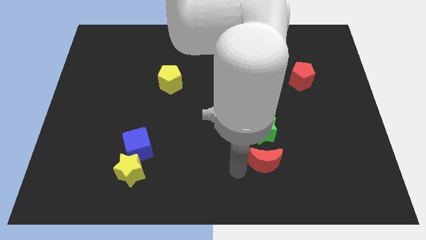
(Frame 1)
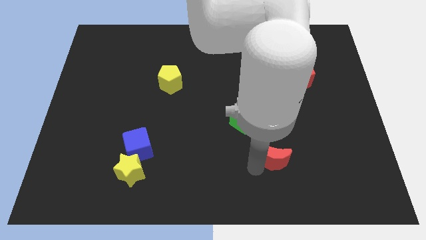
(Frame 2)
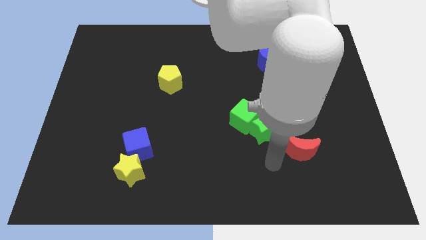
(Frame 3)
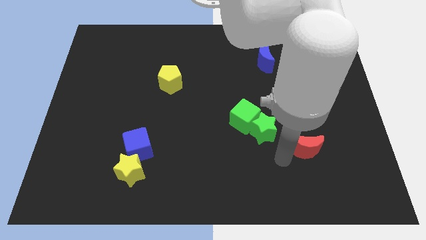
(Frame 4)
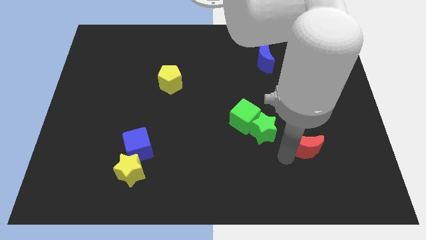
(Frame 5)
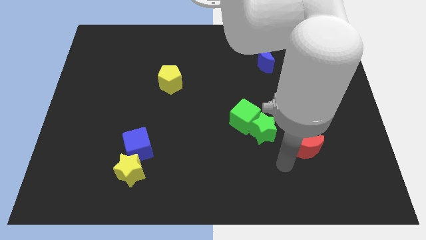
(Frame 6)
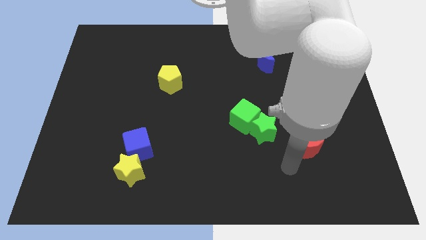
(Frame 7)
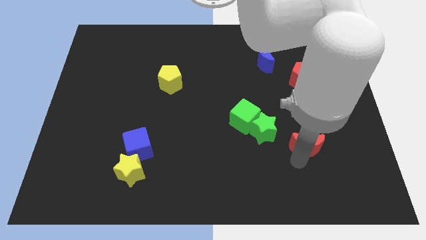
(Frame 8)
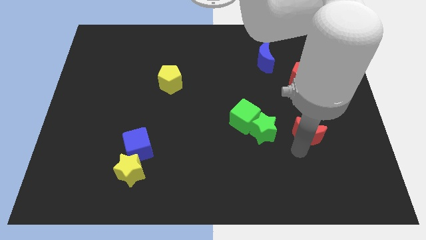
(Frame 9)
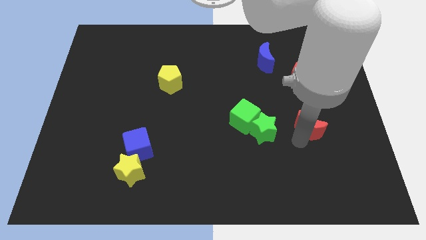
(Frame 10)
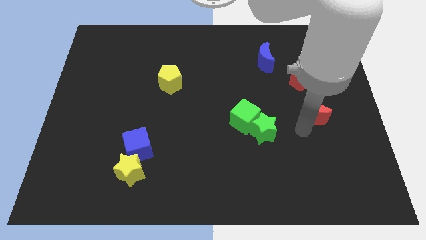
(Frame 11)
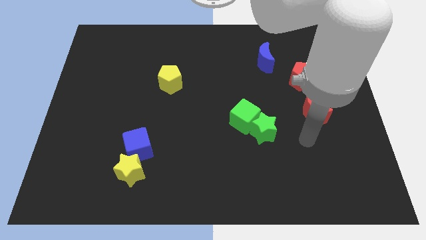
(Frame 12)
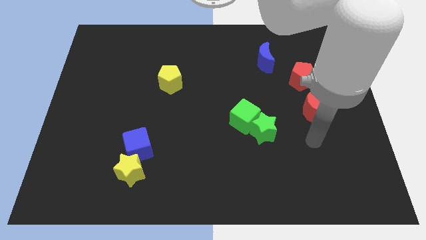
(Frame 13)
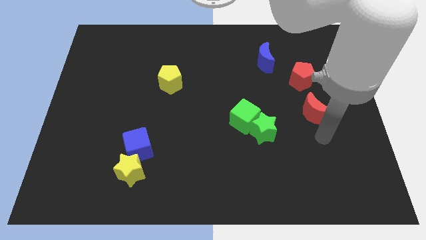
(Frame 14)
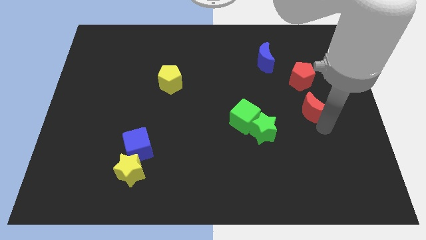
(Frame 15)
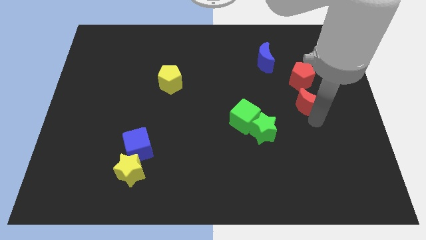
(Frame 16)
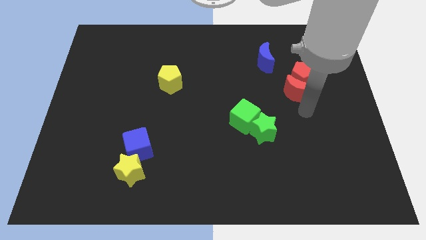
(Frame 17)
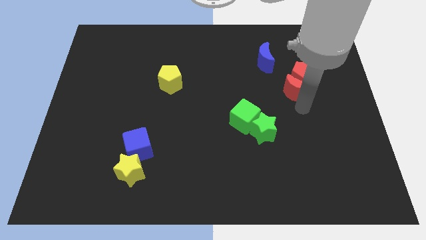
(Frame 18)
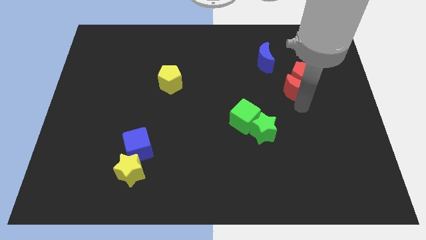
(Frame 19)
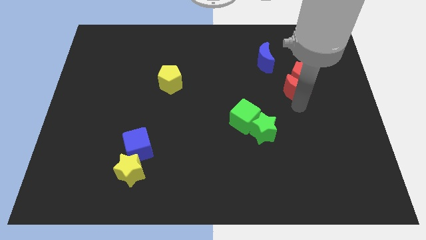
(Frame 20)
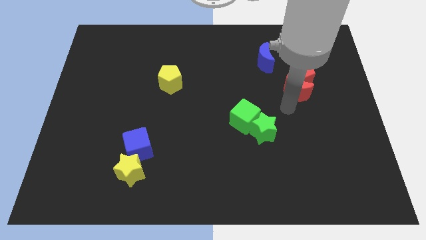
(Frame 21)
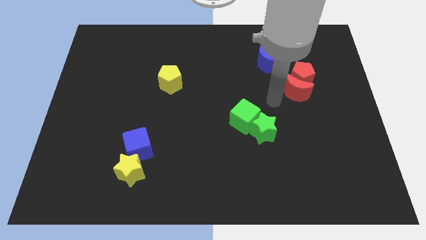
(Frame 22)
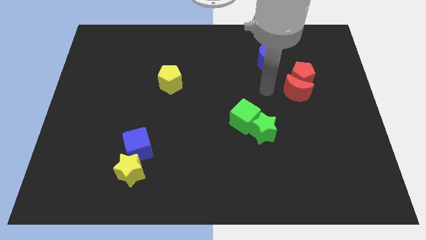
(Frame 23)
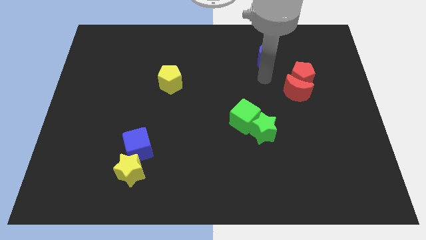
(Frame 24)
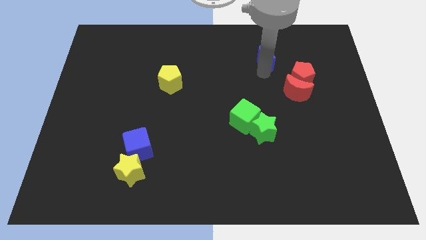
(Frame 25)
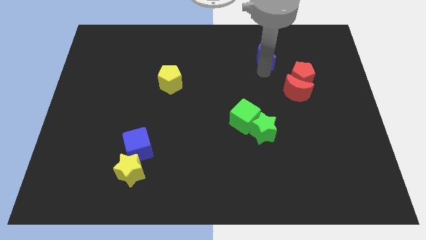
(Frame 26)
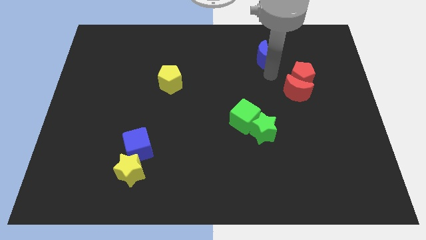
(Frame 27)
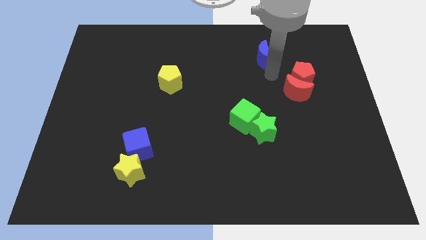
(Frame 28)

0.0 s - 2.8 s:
push the red moon into the red pentagon

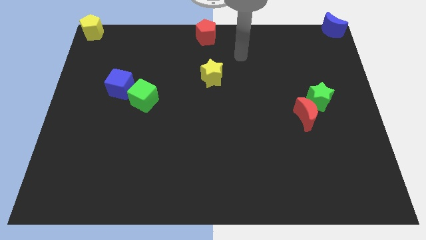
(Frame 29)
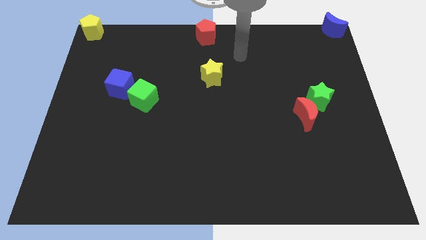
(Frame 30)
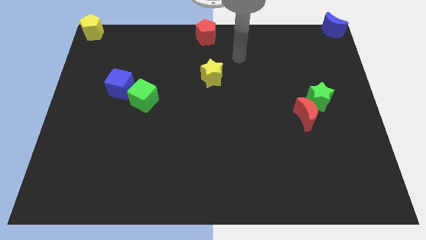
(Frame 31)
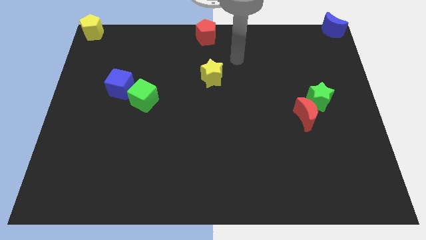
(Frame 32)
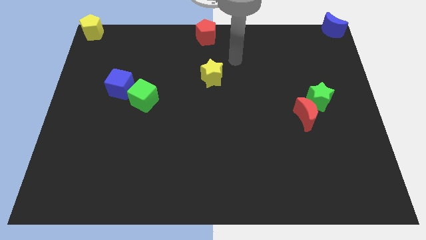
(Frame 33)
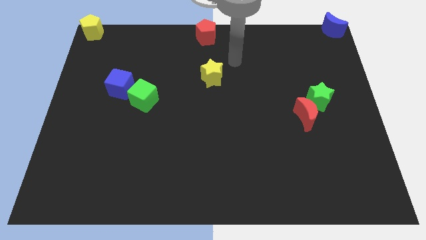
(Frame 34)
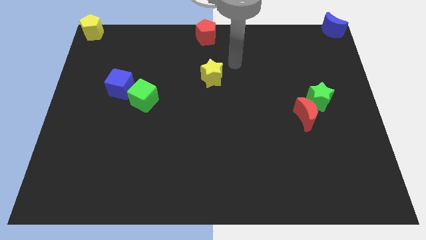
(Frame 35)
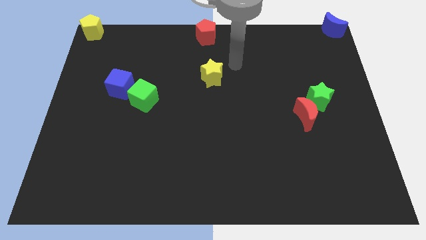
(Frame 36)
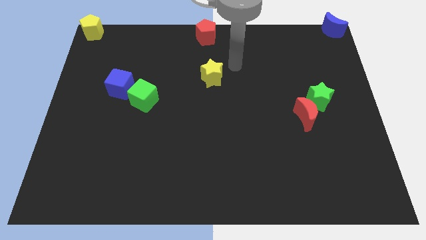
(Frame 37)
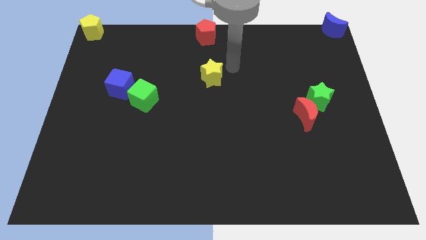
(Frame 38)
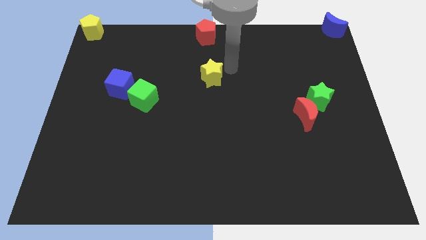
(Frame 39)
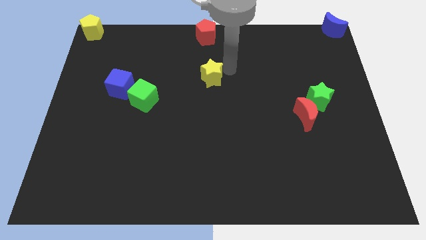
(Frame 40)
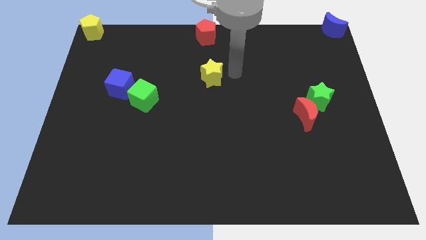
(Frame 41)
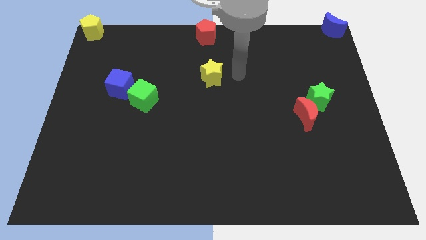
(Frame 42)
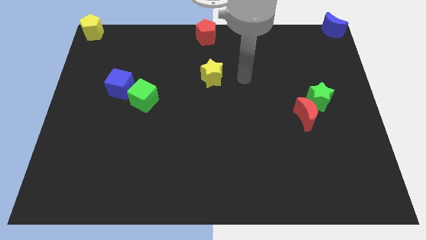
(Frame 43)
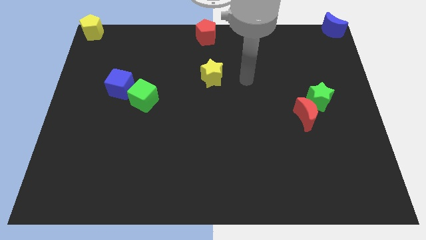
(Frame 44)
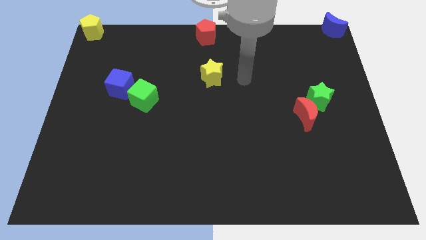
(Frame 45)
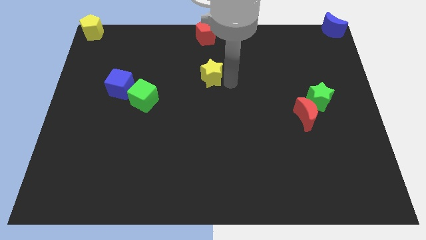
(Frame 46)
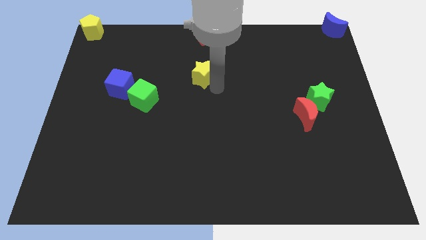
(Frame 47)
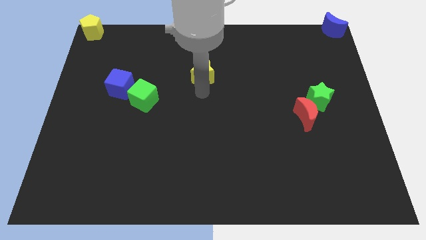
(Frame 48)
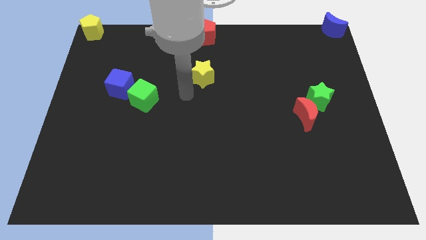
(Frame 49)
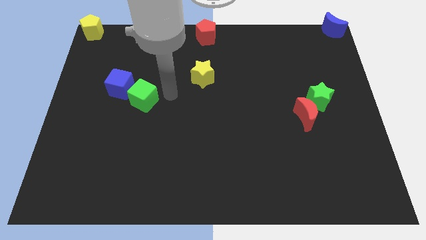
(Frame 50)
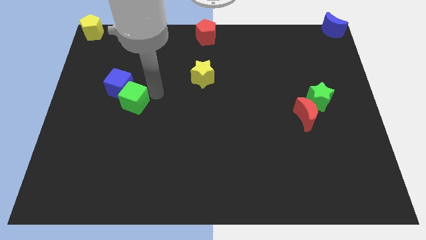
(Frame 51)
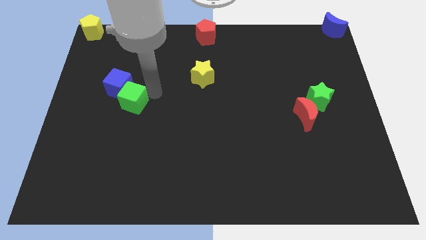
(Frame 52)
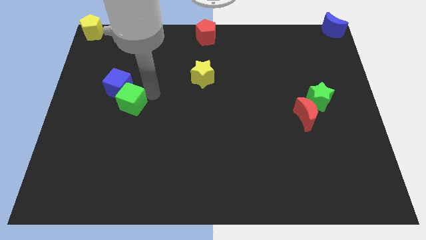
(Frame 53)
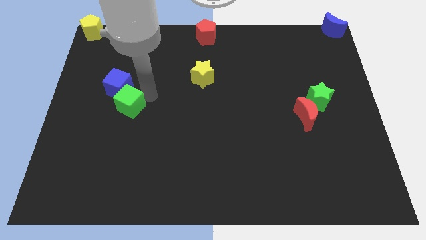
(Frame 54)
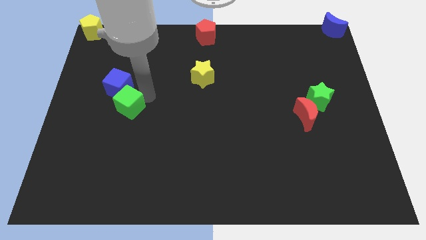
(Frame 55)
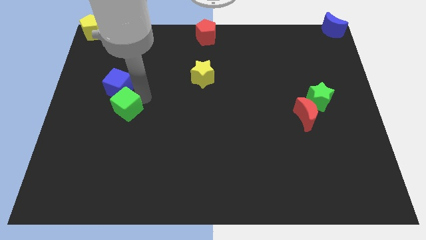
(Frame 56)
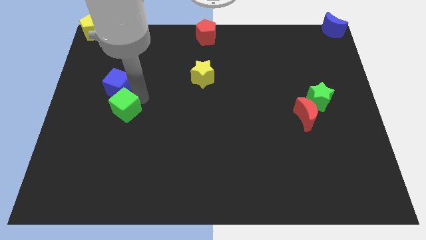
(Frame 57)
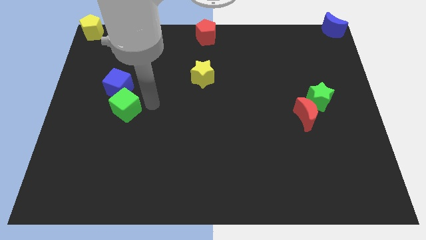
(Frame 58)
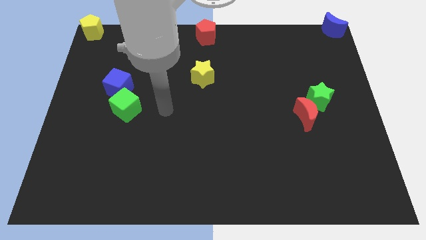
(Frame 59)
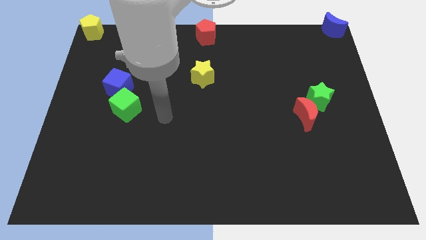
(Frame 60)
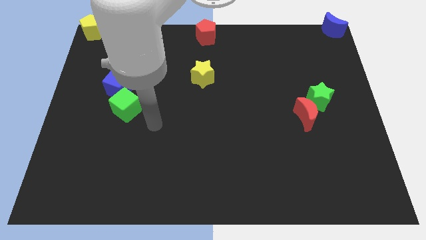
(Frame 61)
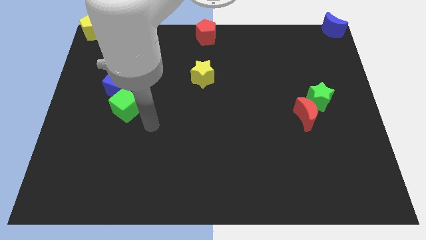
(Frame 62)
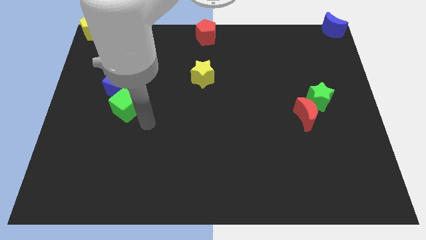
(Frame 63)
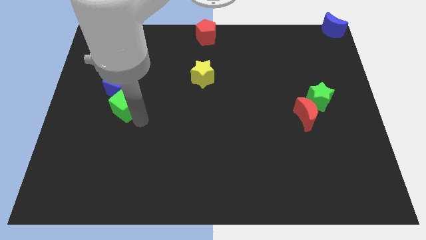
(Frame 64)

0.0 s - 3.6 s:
push green cube to the bottom of blue cube

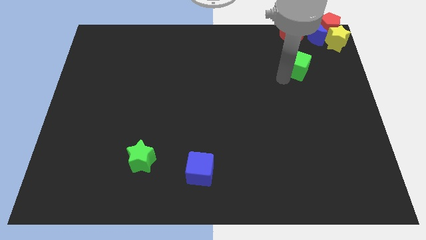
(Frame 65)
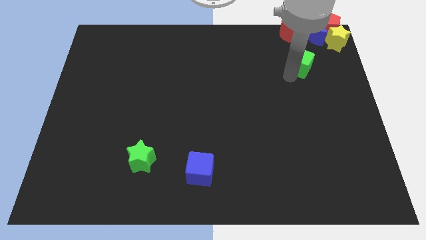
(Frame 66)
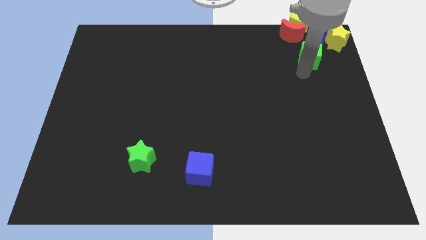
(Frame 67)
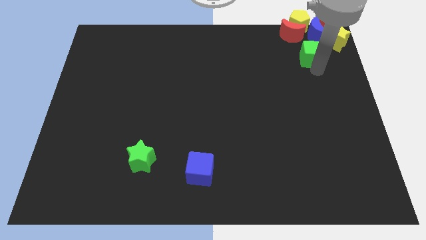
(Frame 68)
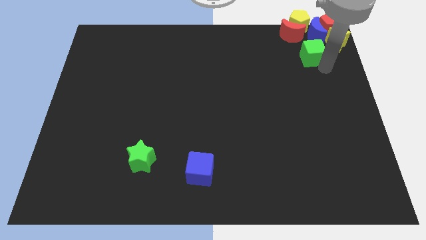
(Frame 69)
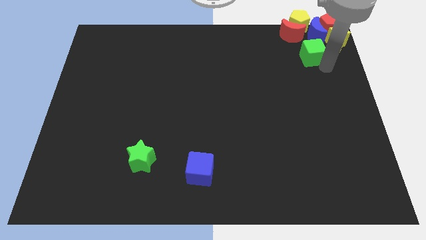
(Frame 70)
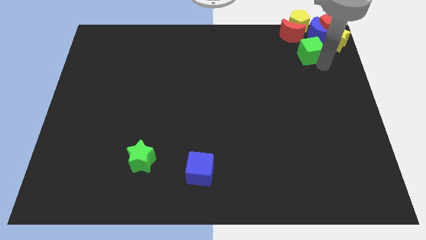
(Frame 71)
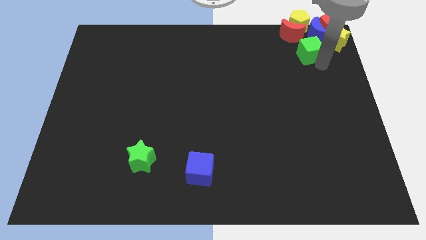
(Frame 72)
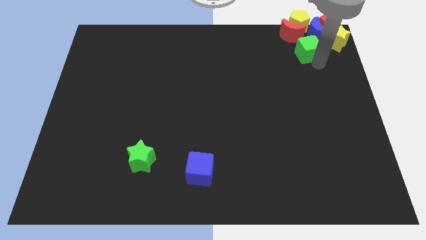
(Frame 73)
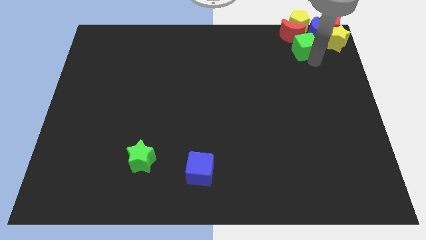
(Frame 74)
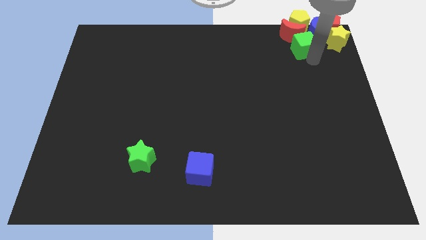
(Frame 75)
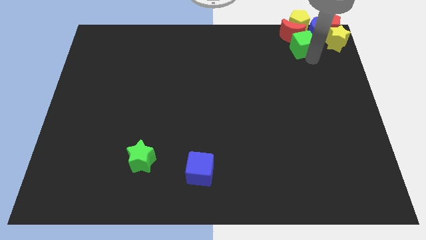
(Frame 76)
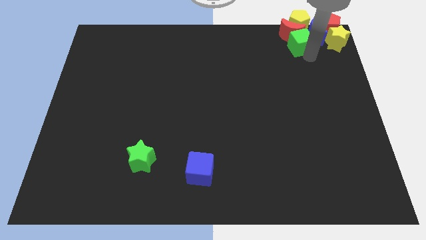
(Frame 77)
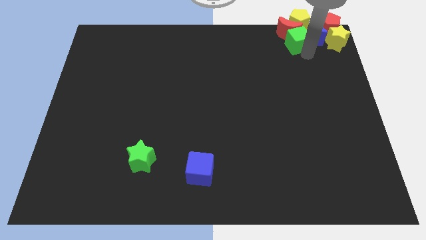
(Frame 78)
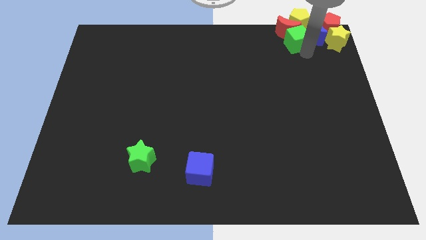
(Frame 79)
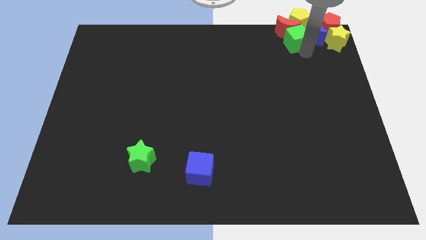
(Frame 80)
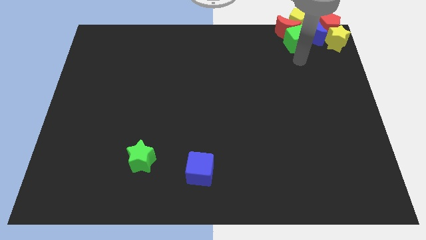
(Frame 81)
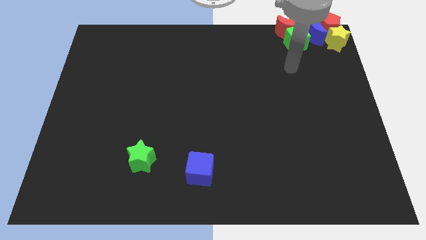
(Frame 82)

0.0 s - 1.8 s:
move green cube into group of blocks

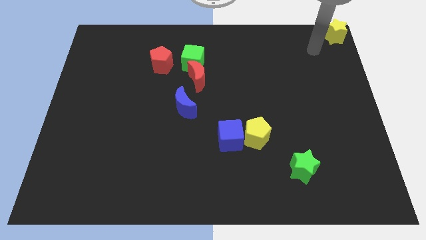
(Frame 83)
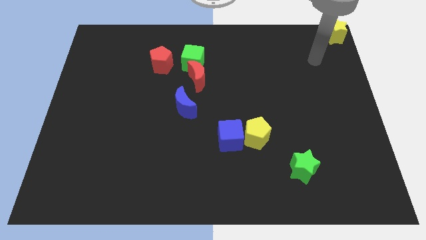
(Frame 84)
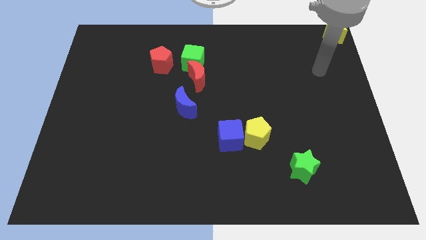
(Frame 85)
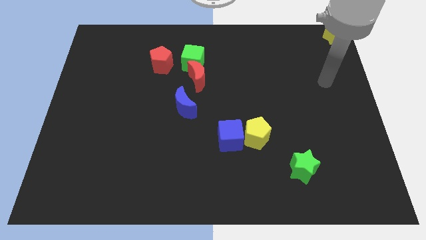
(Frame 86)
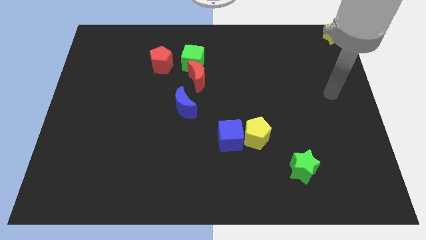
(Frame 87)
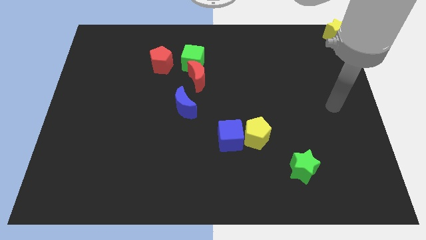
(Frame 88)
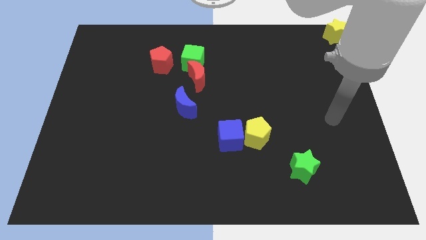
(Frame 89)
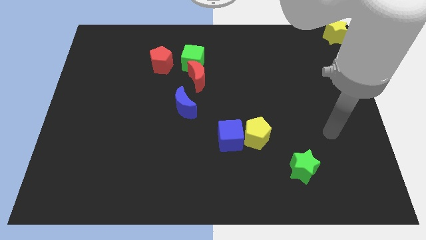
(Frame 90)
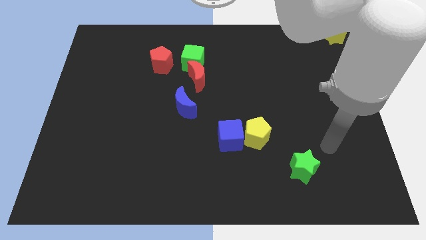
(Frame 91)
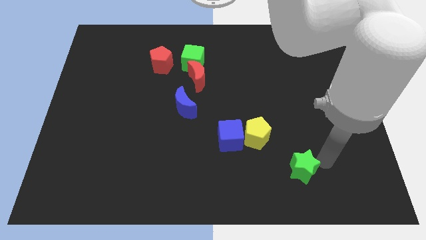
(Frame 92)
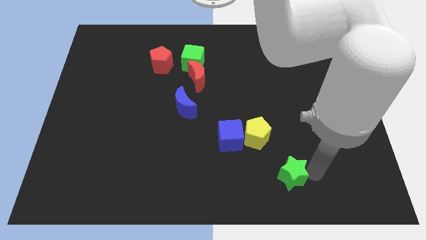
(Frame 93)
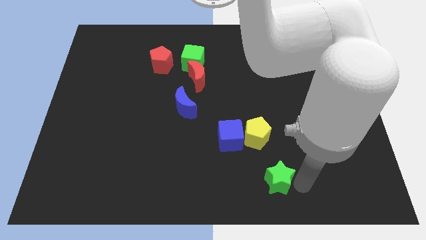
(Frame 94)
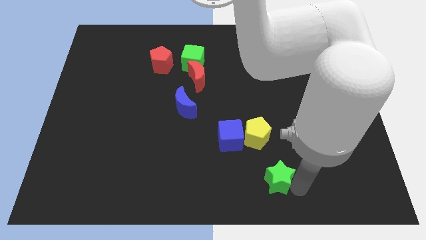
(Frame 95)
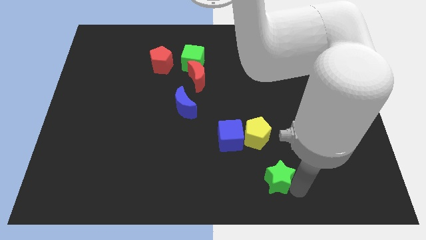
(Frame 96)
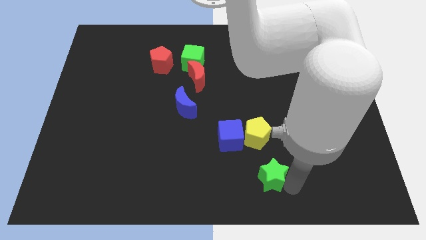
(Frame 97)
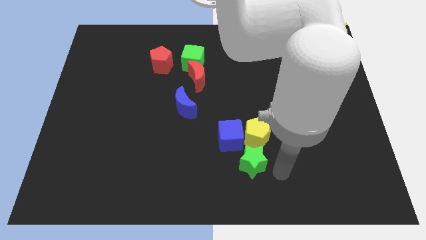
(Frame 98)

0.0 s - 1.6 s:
put the green star below the yellow pentagon
